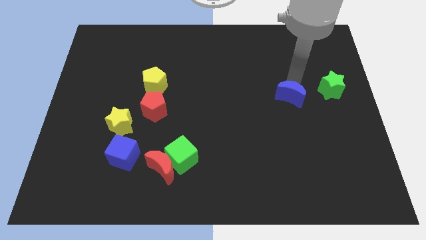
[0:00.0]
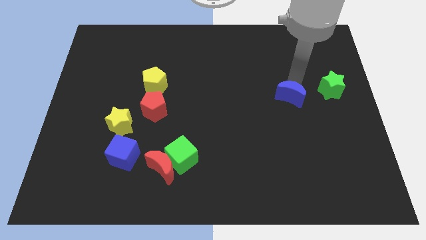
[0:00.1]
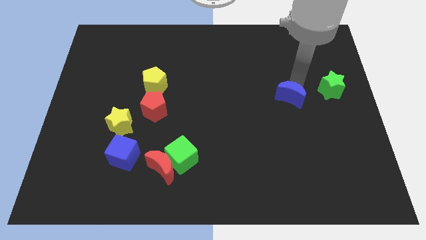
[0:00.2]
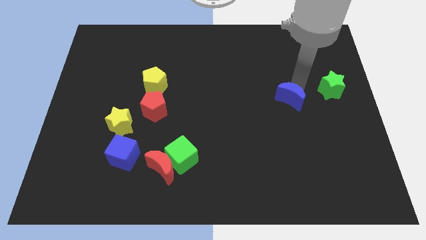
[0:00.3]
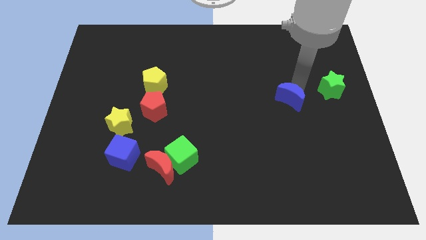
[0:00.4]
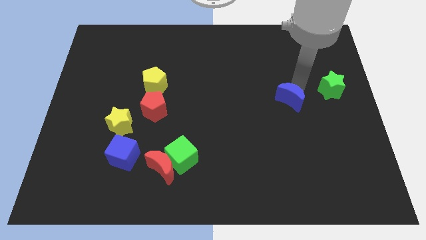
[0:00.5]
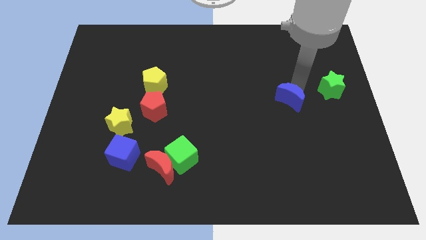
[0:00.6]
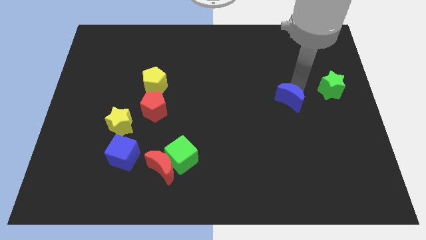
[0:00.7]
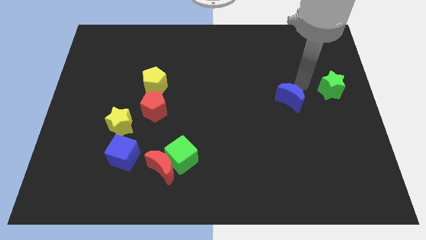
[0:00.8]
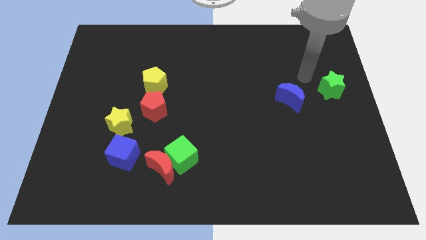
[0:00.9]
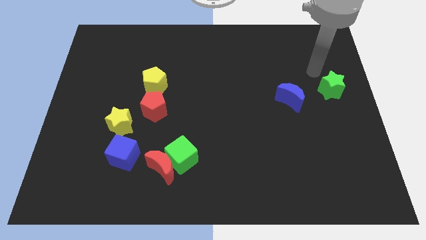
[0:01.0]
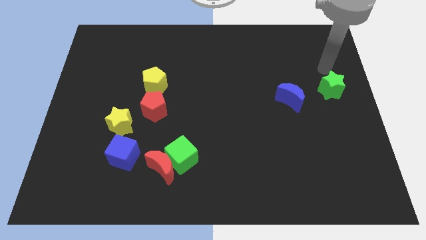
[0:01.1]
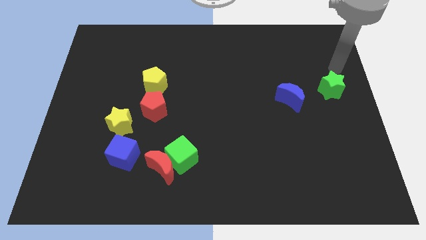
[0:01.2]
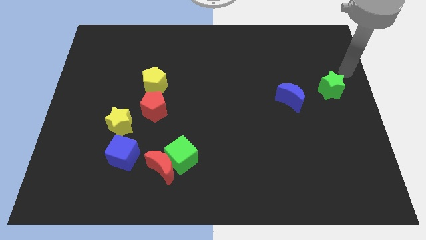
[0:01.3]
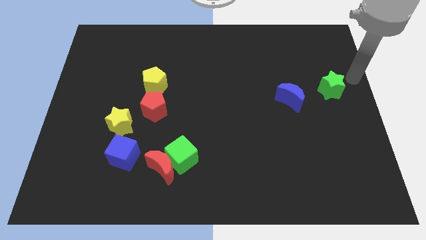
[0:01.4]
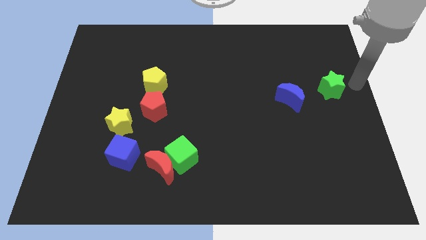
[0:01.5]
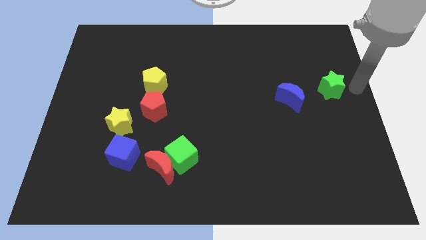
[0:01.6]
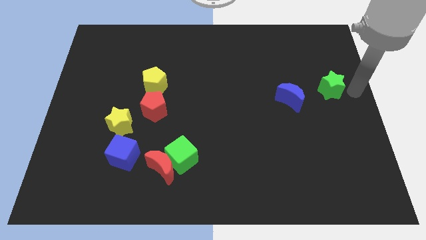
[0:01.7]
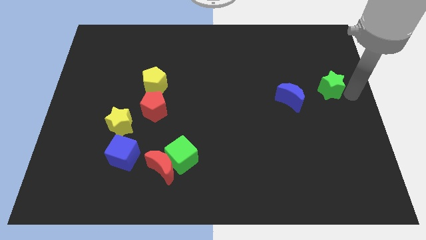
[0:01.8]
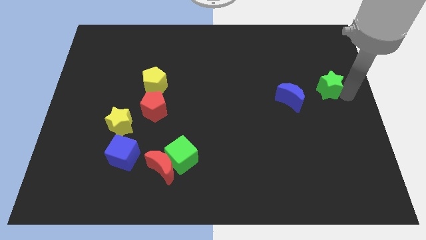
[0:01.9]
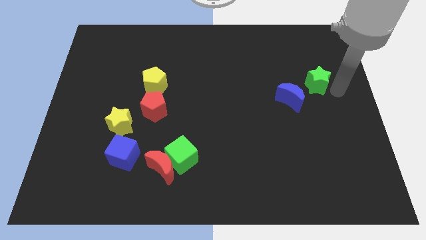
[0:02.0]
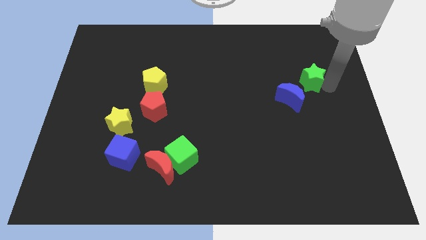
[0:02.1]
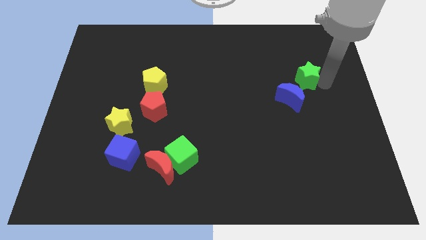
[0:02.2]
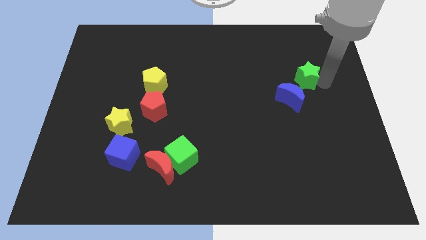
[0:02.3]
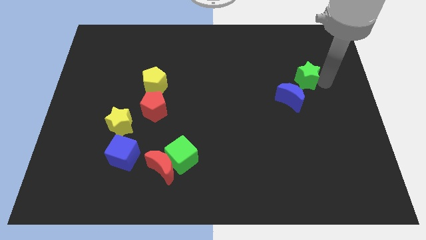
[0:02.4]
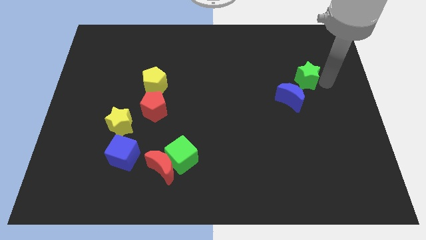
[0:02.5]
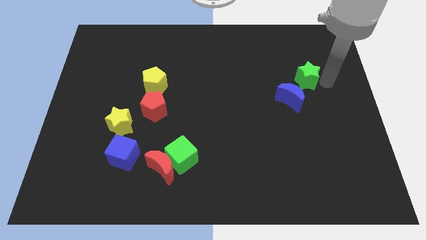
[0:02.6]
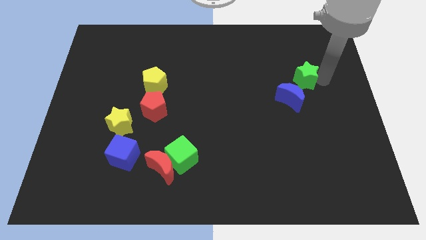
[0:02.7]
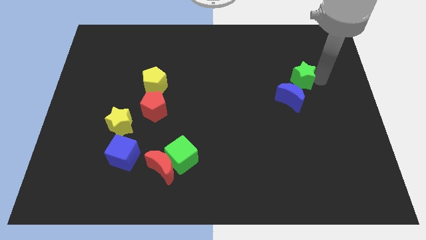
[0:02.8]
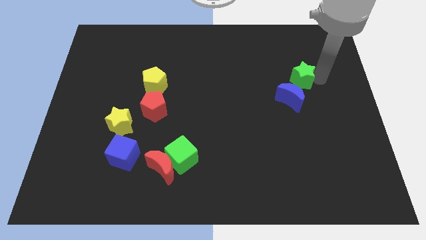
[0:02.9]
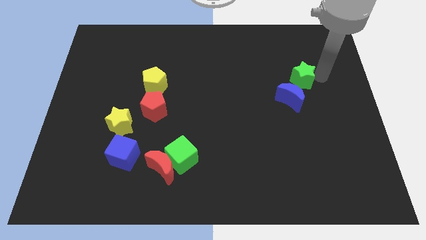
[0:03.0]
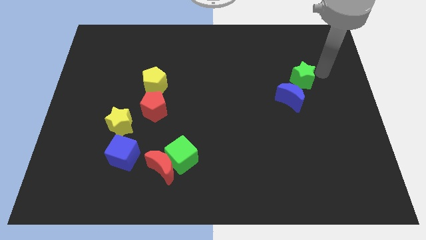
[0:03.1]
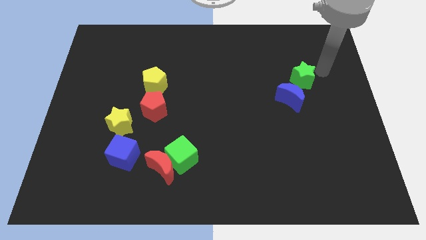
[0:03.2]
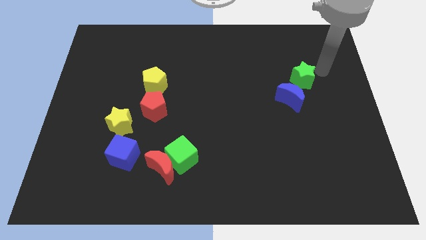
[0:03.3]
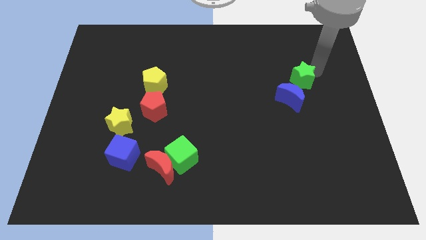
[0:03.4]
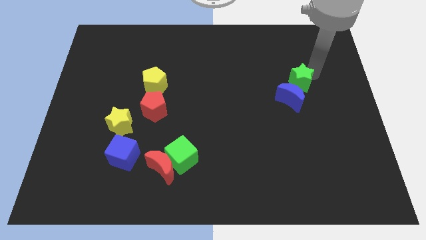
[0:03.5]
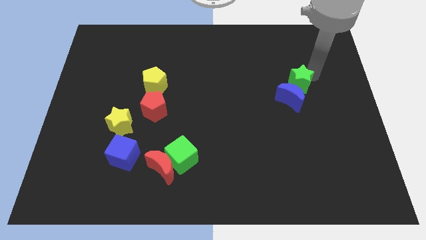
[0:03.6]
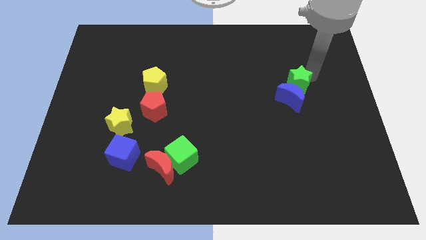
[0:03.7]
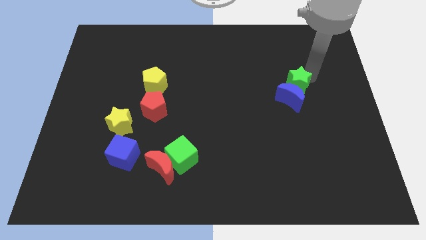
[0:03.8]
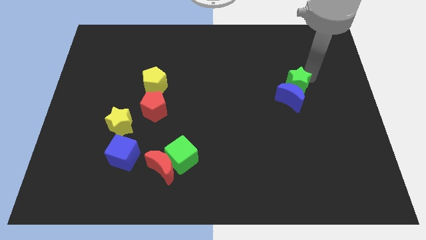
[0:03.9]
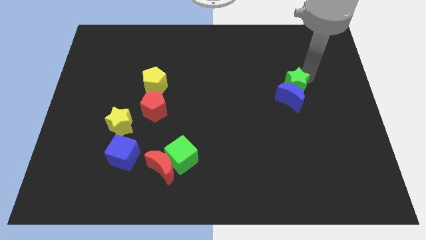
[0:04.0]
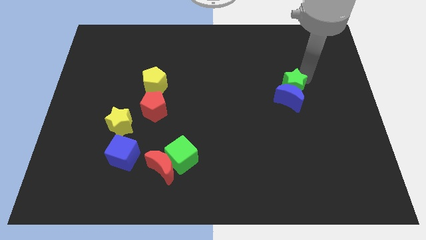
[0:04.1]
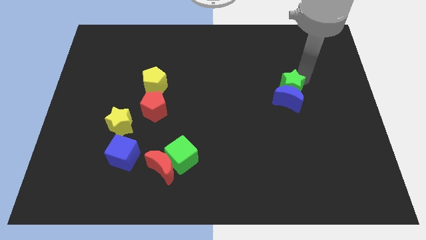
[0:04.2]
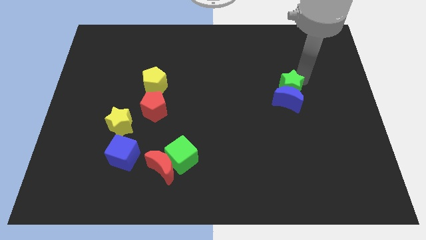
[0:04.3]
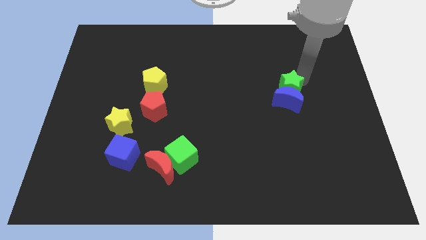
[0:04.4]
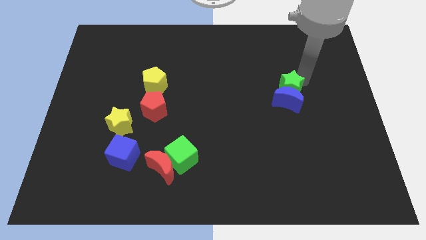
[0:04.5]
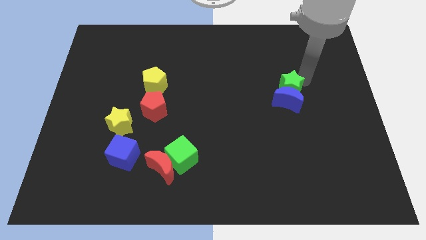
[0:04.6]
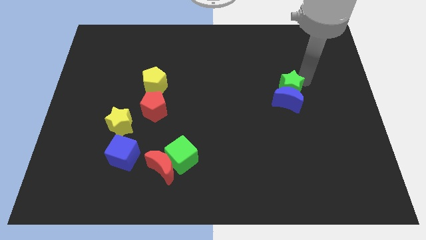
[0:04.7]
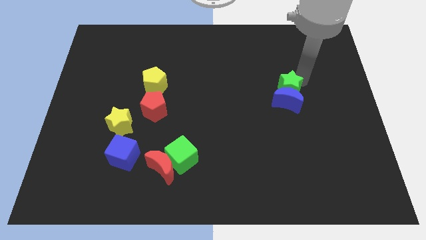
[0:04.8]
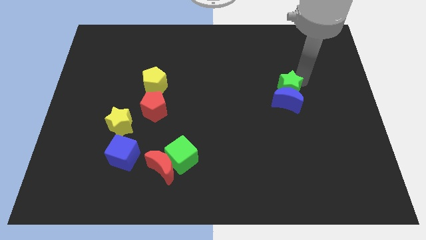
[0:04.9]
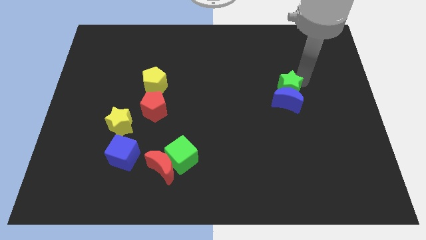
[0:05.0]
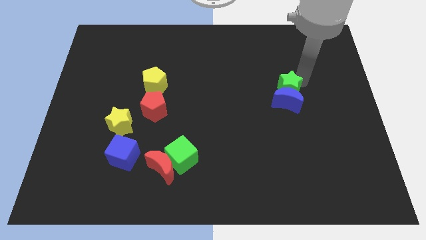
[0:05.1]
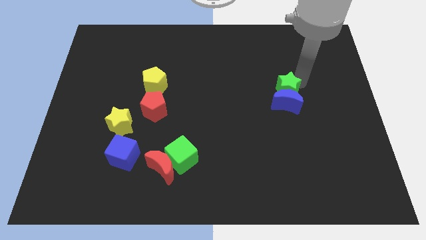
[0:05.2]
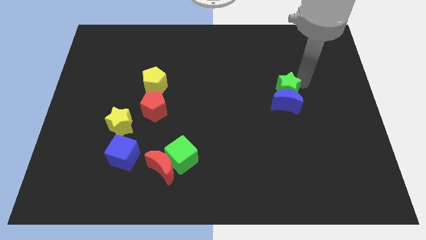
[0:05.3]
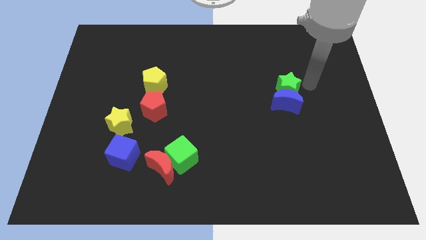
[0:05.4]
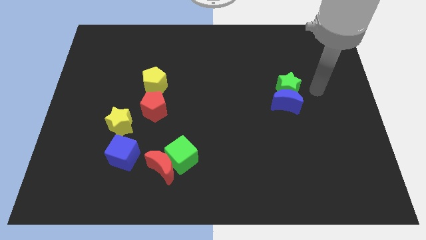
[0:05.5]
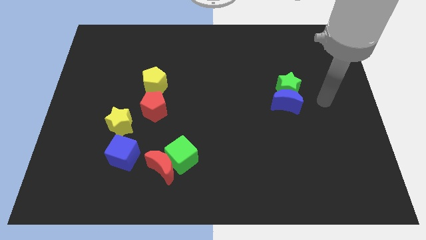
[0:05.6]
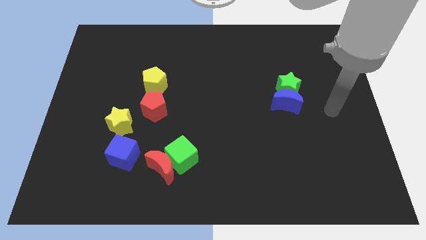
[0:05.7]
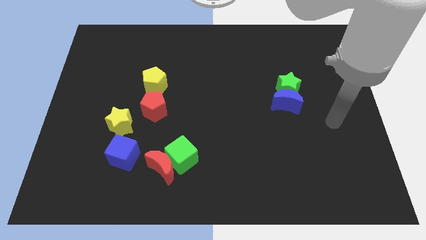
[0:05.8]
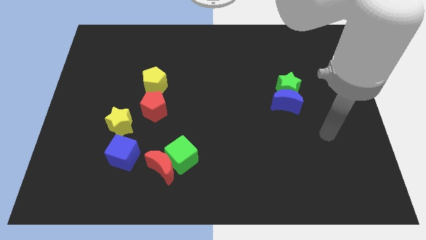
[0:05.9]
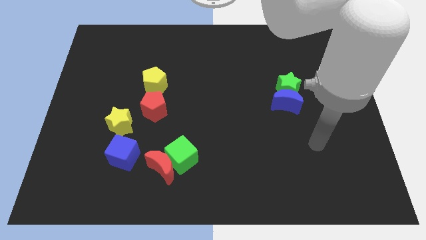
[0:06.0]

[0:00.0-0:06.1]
push the green star on to the top of blue crescent

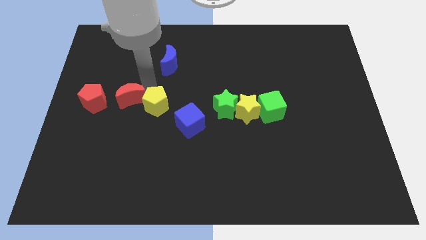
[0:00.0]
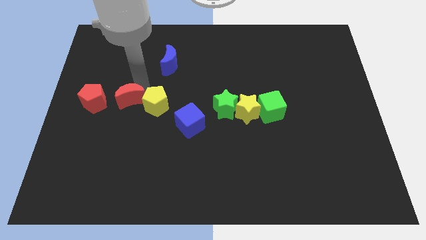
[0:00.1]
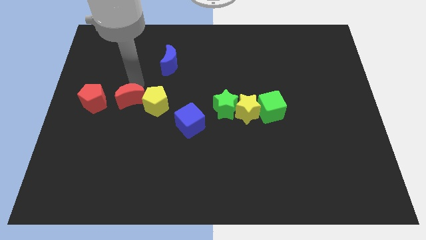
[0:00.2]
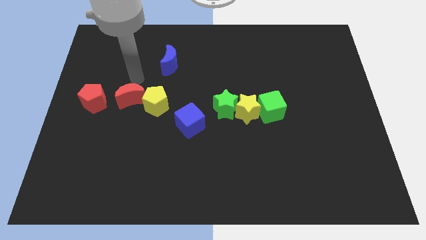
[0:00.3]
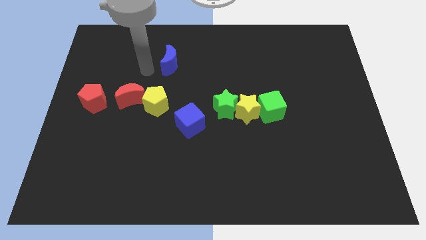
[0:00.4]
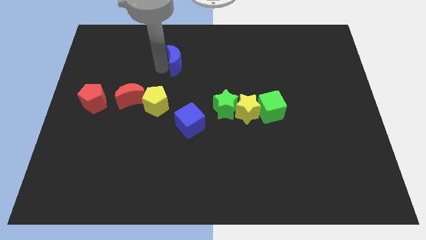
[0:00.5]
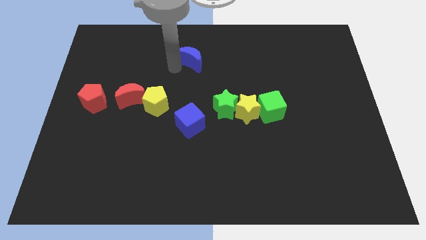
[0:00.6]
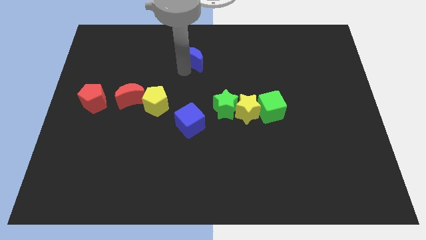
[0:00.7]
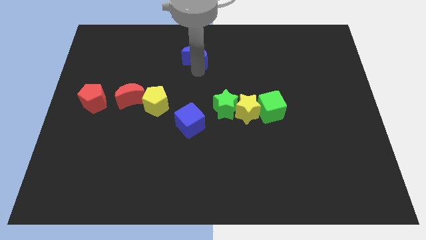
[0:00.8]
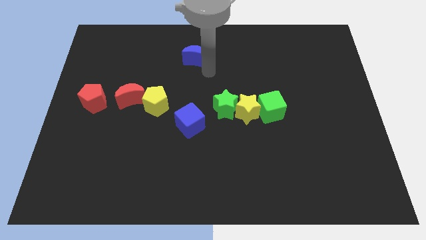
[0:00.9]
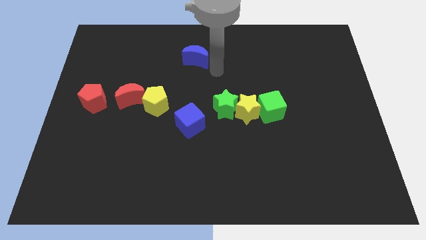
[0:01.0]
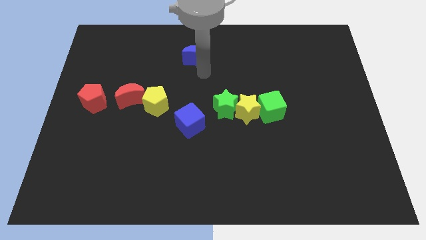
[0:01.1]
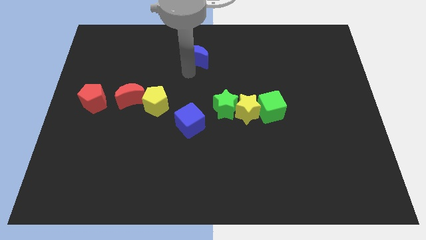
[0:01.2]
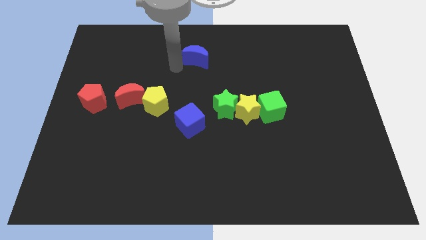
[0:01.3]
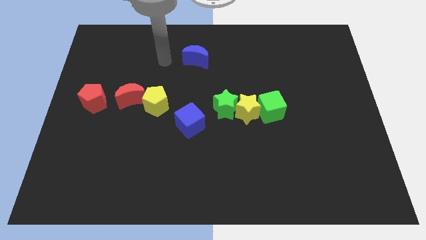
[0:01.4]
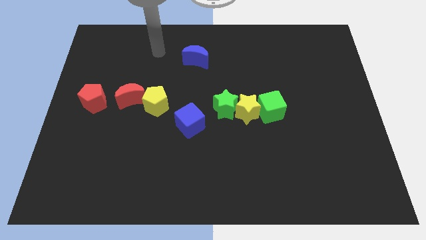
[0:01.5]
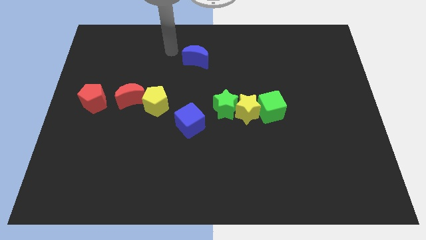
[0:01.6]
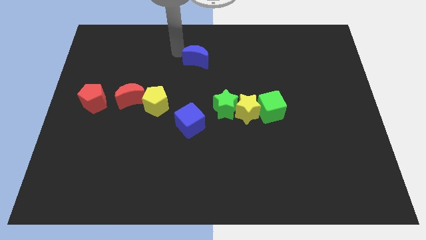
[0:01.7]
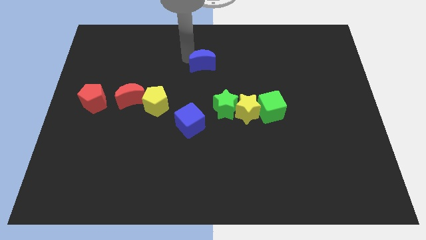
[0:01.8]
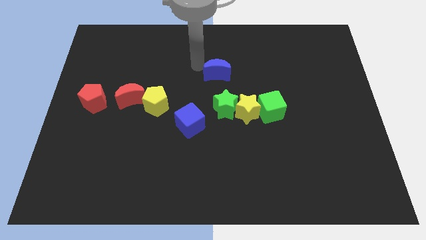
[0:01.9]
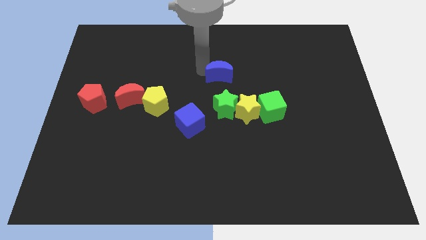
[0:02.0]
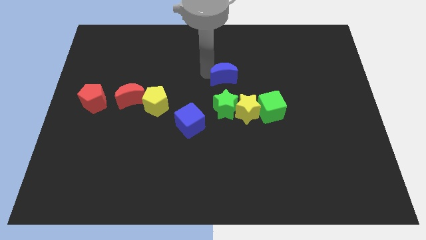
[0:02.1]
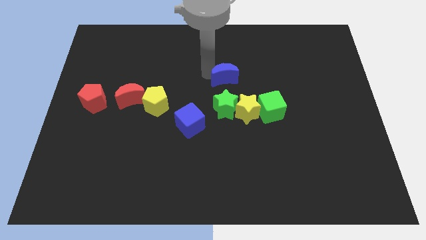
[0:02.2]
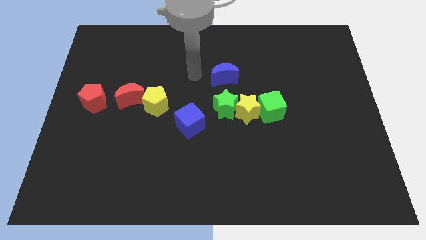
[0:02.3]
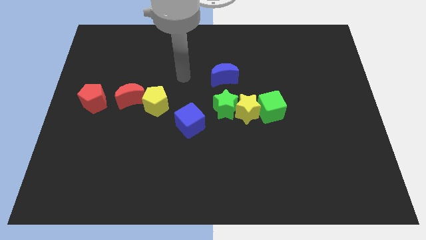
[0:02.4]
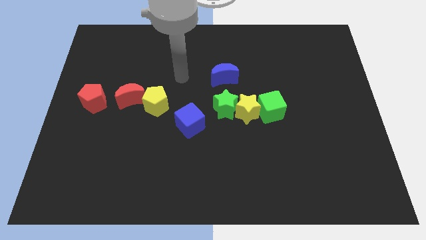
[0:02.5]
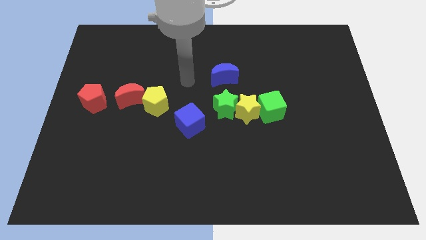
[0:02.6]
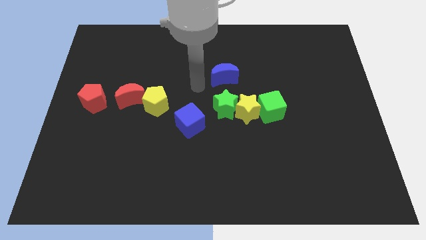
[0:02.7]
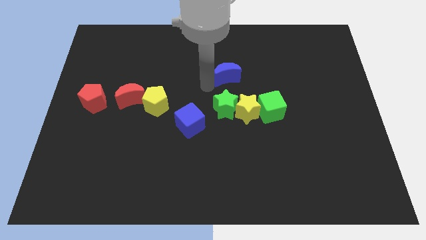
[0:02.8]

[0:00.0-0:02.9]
push the blue crescent towards the right side of the board
